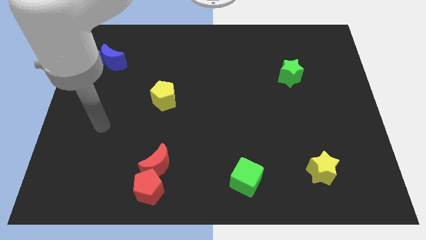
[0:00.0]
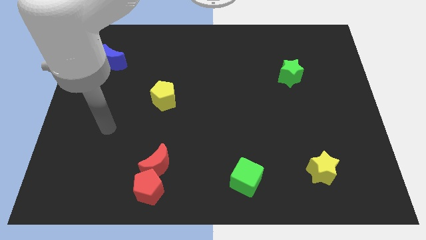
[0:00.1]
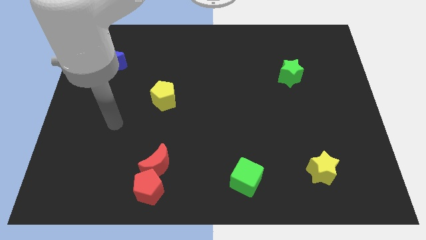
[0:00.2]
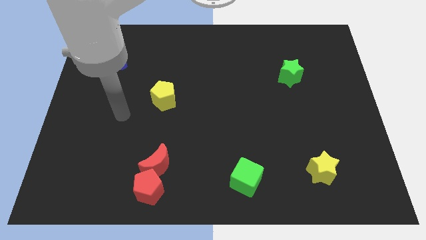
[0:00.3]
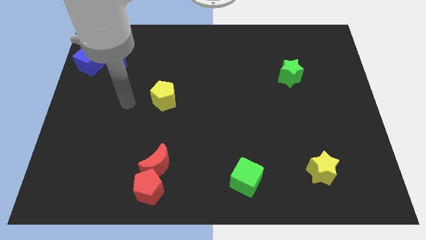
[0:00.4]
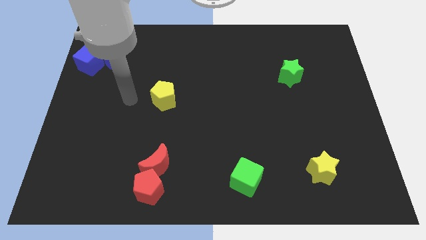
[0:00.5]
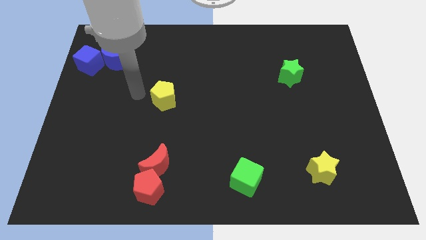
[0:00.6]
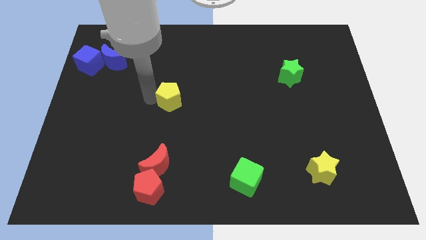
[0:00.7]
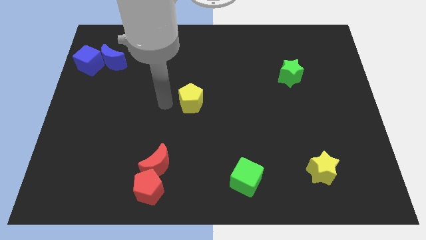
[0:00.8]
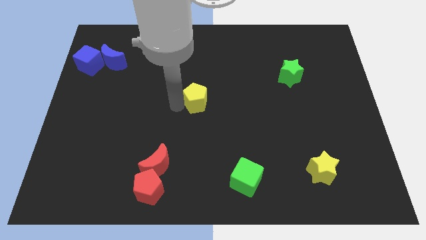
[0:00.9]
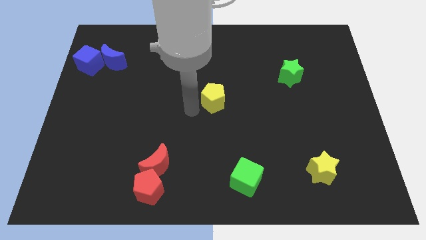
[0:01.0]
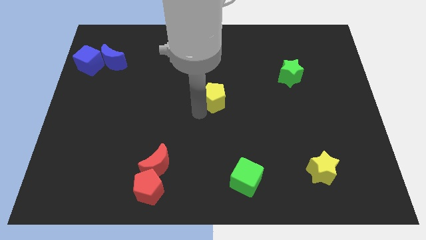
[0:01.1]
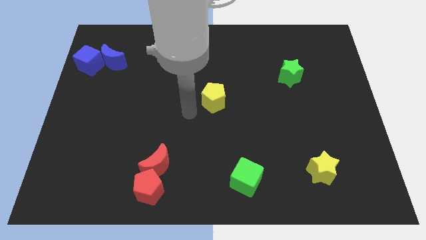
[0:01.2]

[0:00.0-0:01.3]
push the yellow pentagon to the center of the board

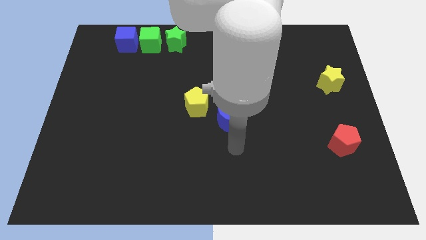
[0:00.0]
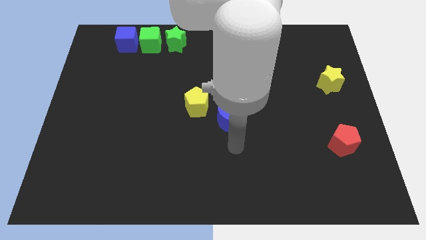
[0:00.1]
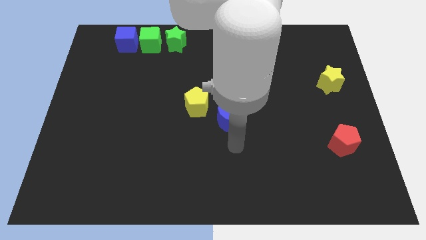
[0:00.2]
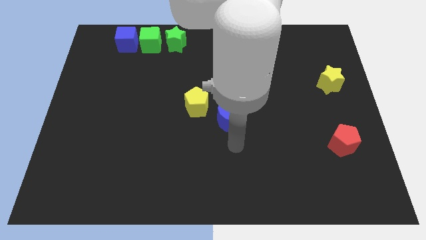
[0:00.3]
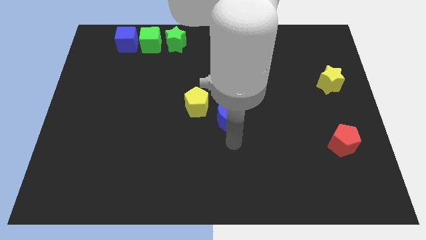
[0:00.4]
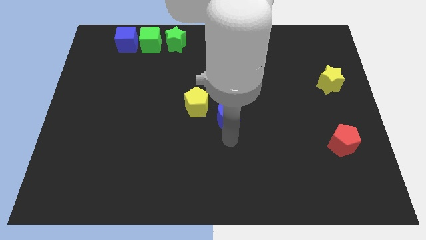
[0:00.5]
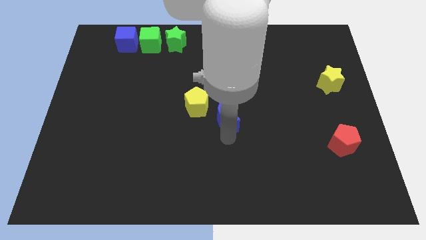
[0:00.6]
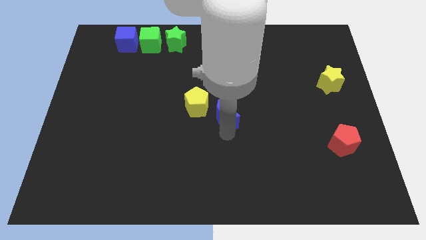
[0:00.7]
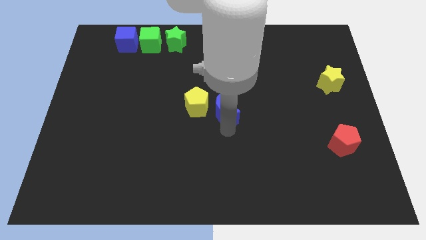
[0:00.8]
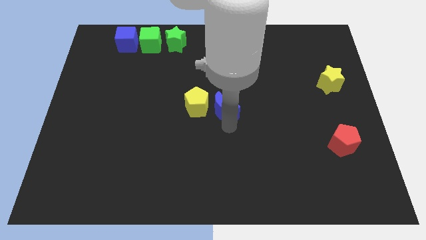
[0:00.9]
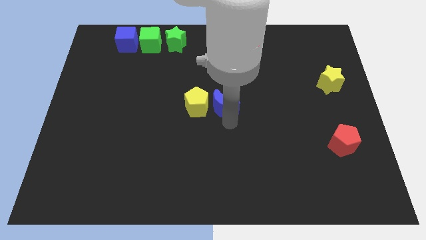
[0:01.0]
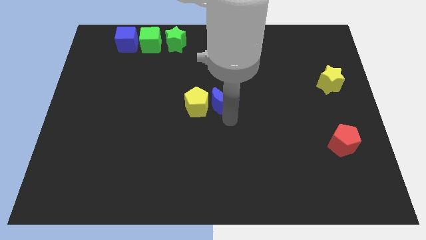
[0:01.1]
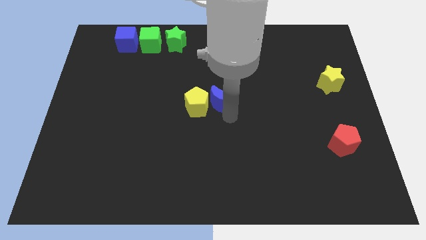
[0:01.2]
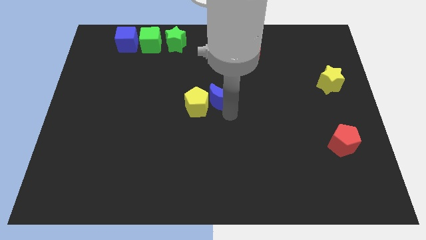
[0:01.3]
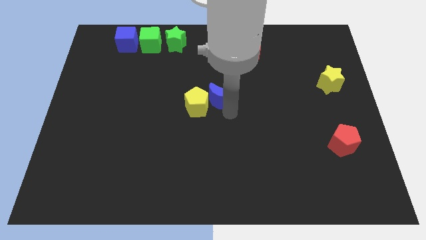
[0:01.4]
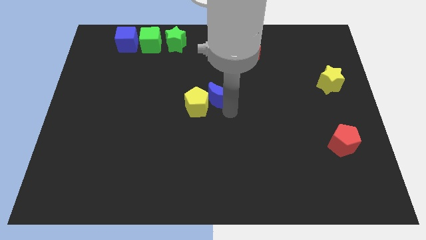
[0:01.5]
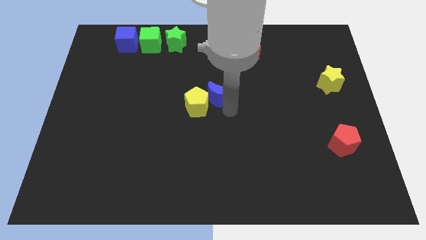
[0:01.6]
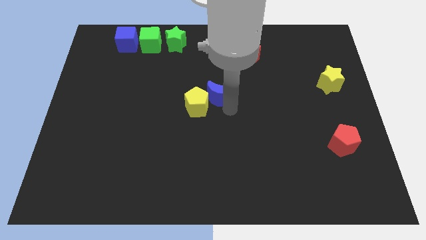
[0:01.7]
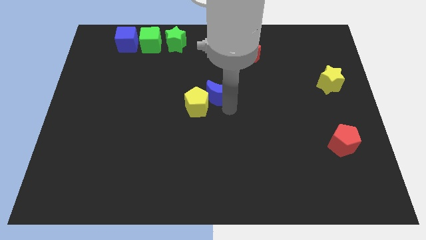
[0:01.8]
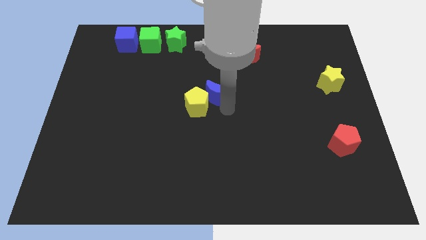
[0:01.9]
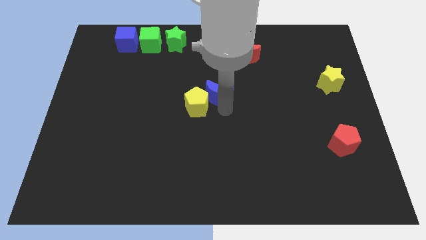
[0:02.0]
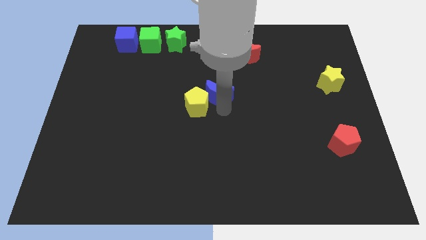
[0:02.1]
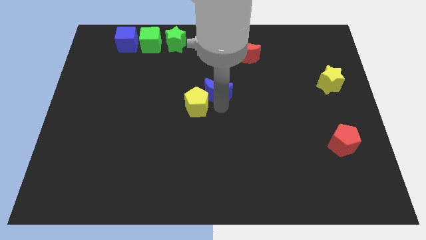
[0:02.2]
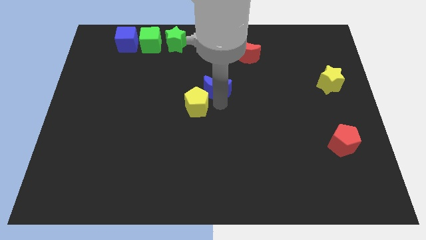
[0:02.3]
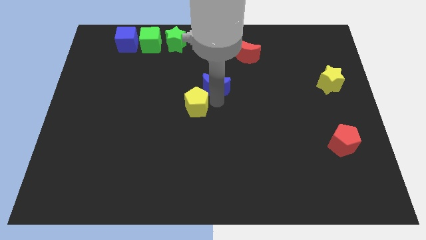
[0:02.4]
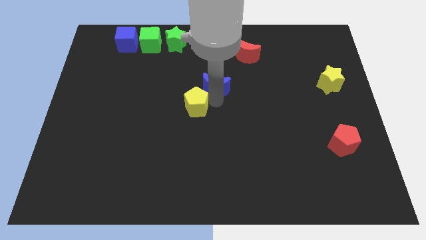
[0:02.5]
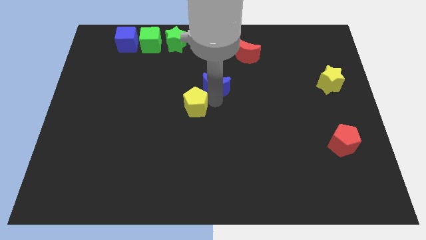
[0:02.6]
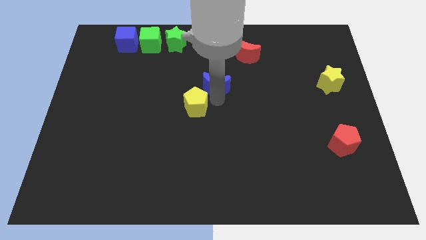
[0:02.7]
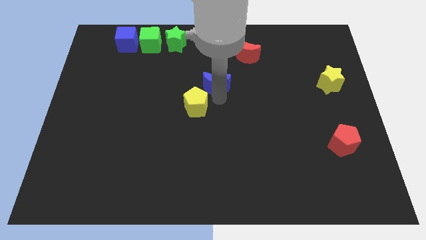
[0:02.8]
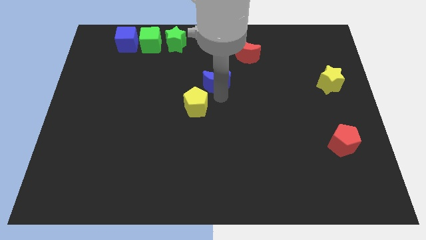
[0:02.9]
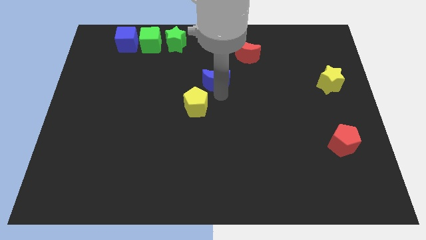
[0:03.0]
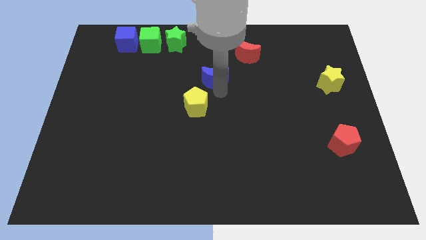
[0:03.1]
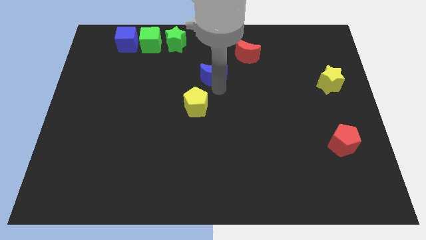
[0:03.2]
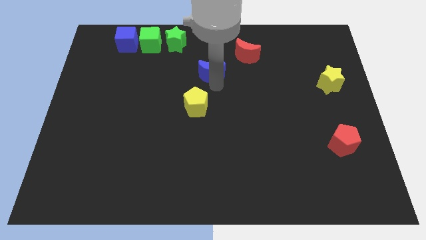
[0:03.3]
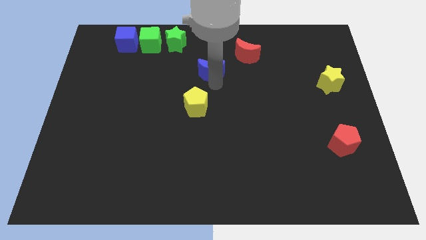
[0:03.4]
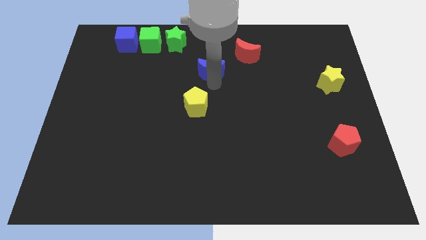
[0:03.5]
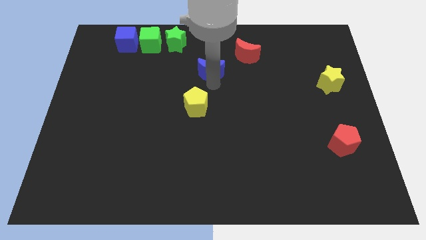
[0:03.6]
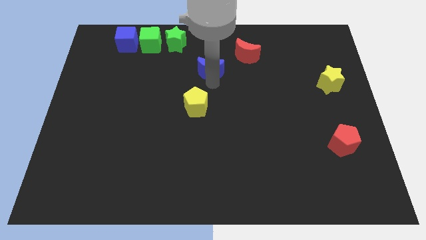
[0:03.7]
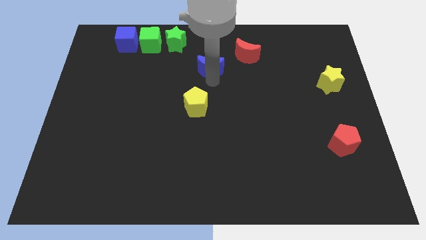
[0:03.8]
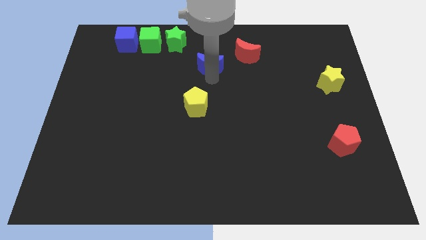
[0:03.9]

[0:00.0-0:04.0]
place the blue moon between the yellow pentagon and red moon

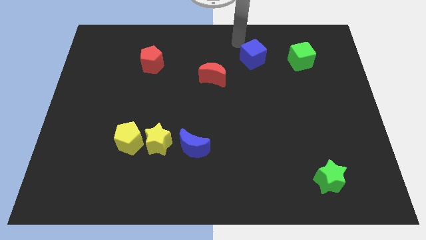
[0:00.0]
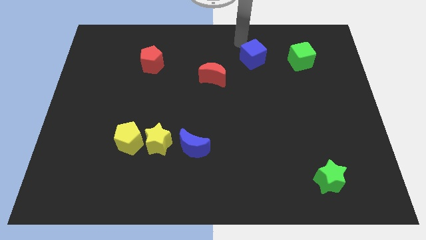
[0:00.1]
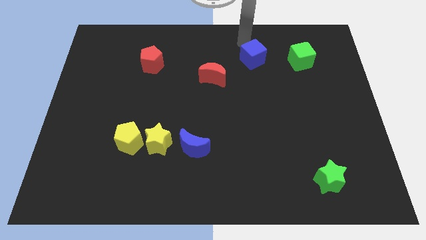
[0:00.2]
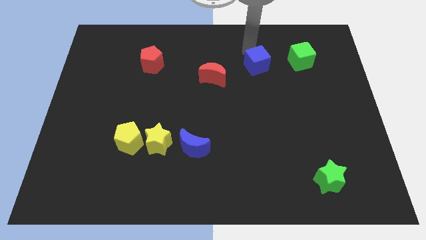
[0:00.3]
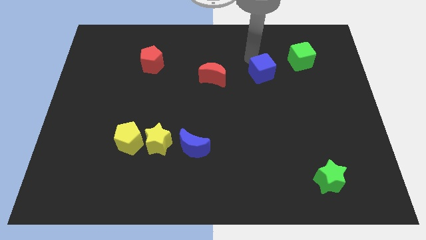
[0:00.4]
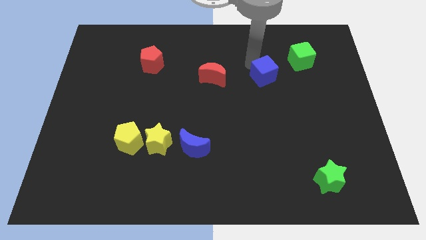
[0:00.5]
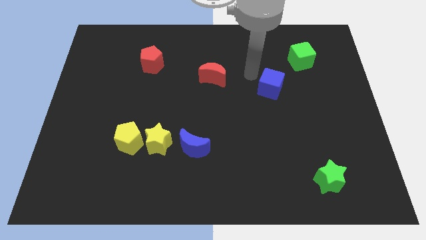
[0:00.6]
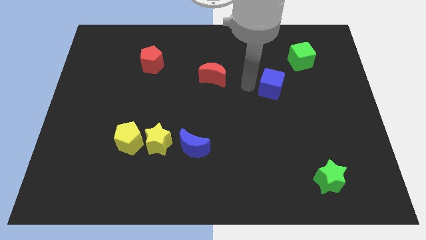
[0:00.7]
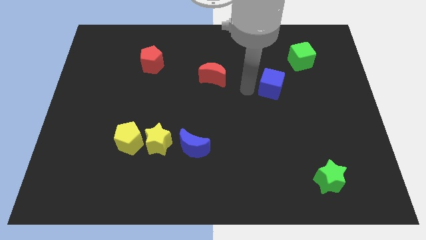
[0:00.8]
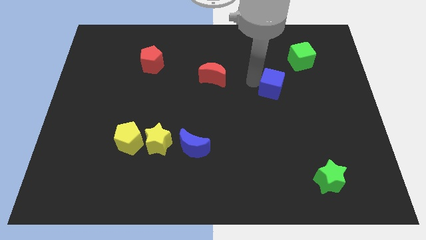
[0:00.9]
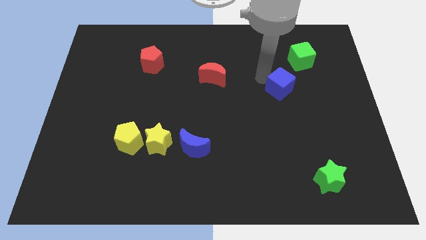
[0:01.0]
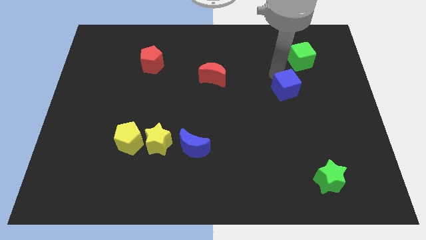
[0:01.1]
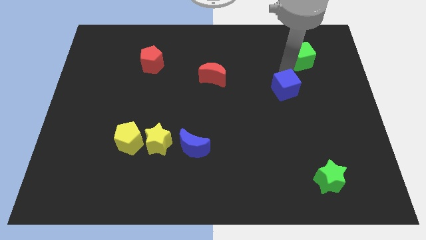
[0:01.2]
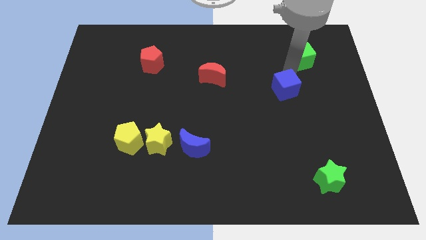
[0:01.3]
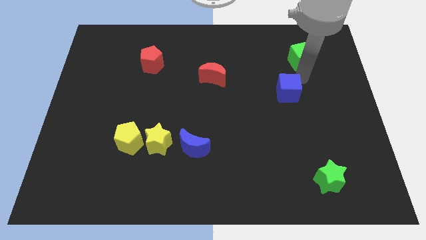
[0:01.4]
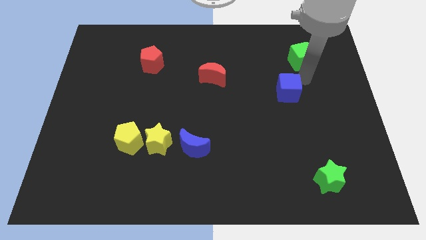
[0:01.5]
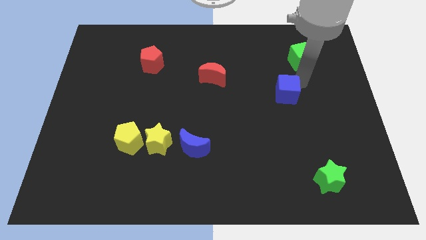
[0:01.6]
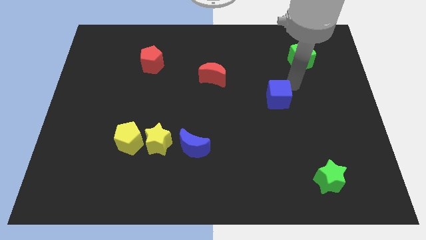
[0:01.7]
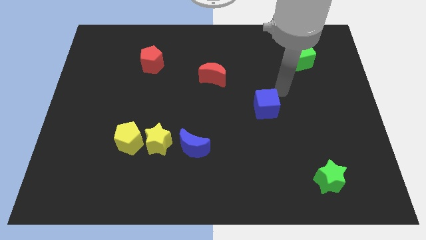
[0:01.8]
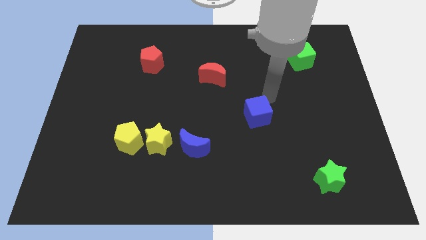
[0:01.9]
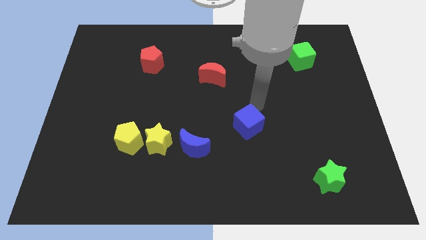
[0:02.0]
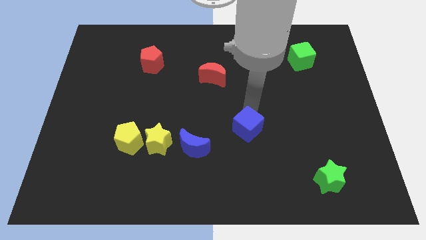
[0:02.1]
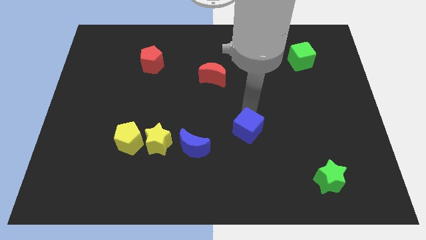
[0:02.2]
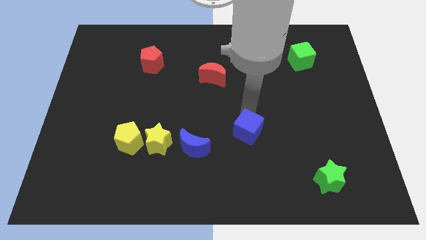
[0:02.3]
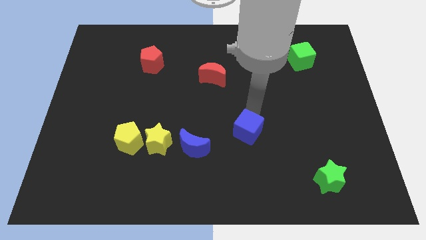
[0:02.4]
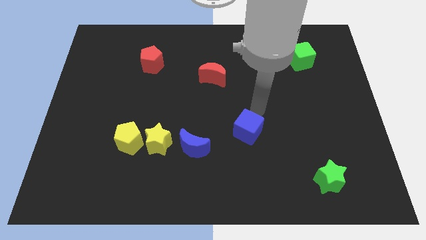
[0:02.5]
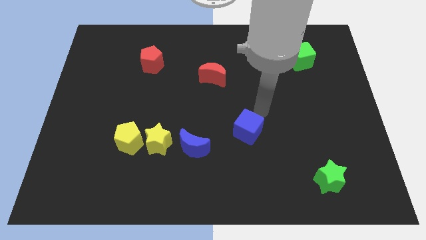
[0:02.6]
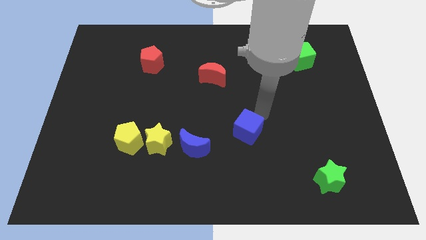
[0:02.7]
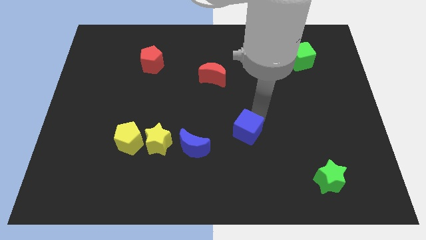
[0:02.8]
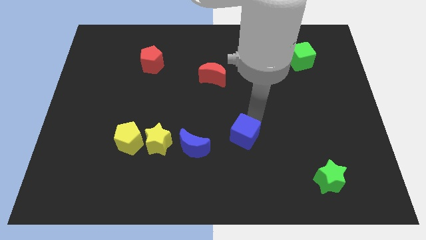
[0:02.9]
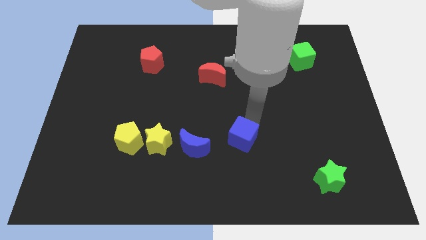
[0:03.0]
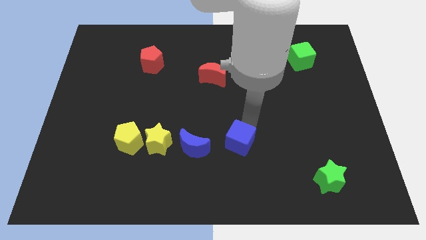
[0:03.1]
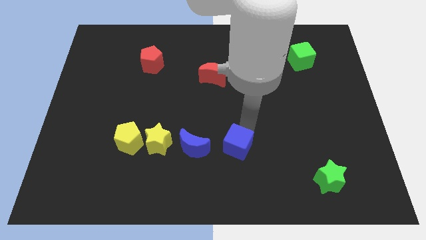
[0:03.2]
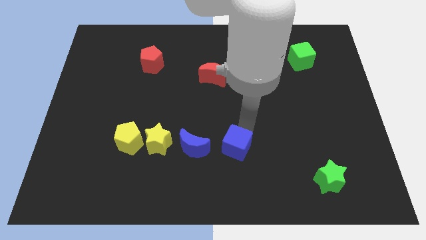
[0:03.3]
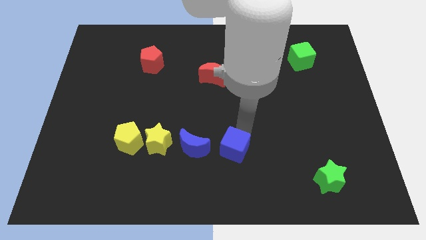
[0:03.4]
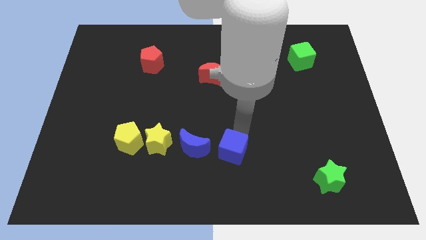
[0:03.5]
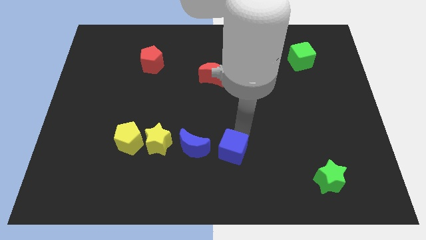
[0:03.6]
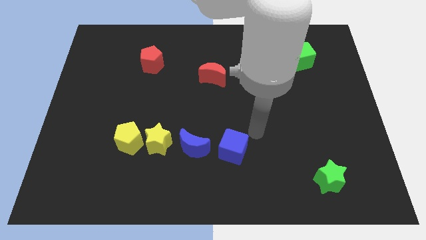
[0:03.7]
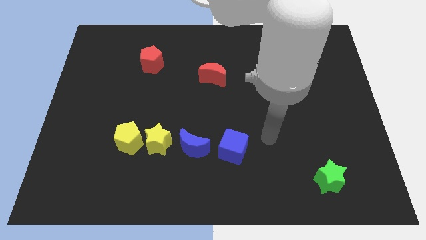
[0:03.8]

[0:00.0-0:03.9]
push blue cube beside blue moon
